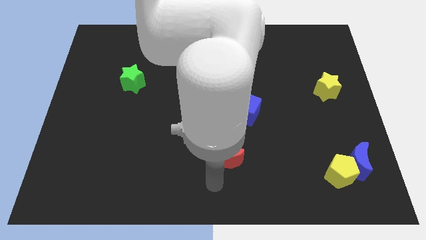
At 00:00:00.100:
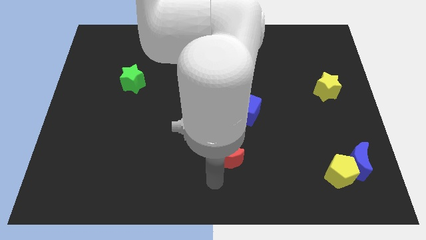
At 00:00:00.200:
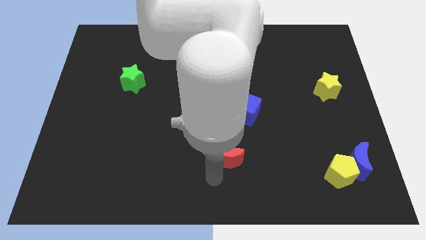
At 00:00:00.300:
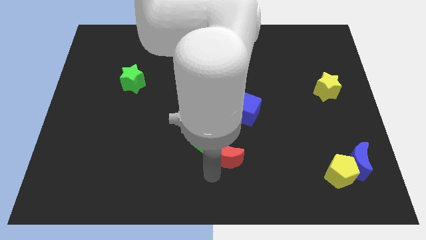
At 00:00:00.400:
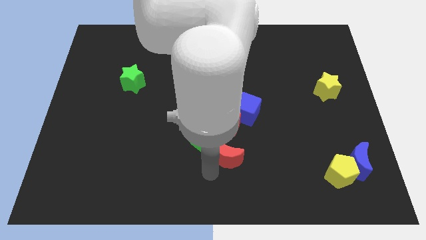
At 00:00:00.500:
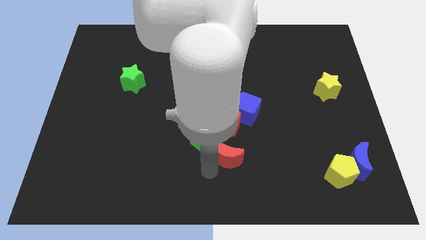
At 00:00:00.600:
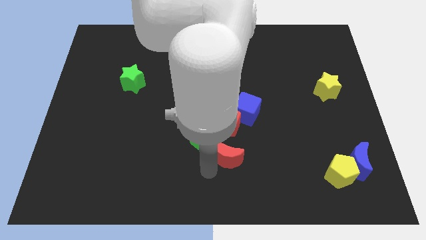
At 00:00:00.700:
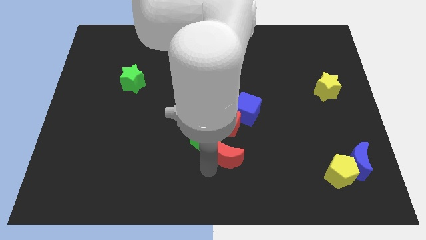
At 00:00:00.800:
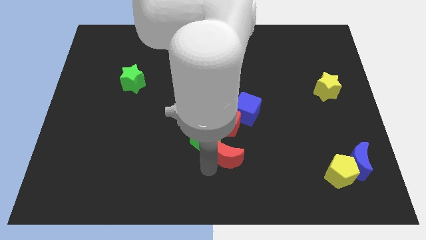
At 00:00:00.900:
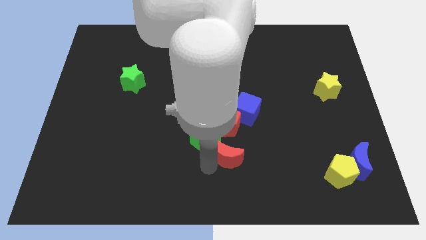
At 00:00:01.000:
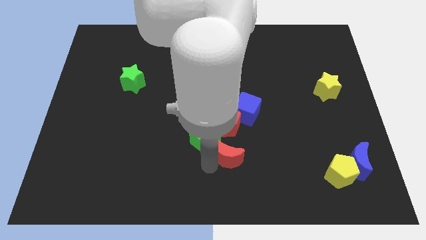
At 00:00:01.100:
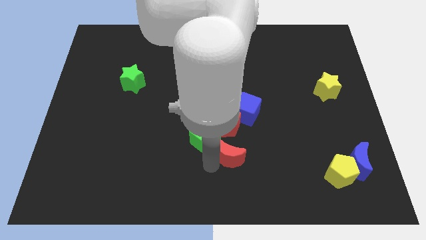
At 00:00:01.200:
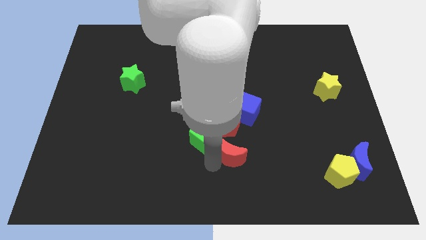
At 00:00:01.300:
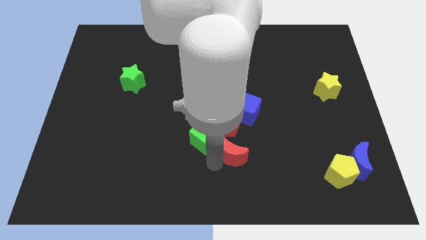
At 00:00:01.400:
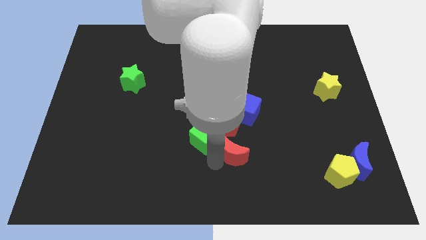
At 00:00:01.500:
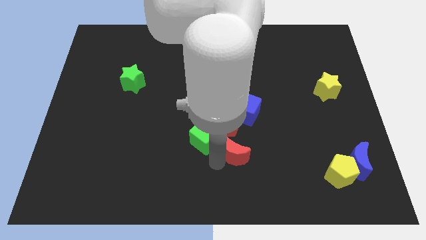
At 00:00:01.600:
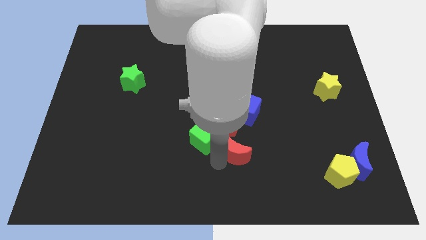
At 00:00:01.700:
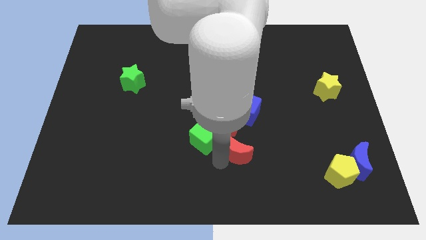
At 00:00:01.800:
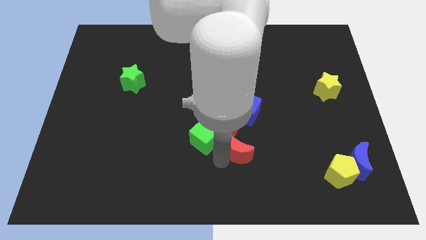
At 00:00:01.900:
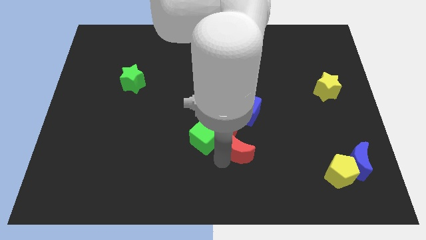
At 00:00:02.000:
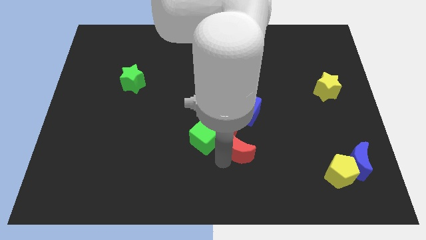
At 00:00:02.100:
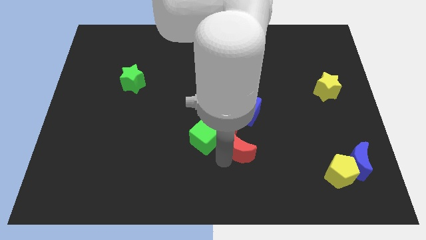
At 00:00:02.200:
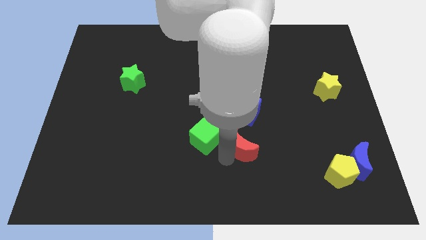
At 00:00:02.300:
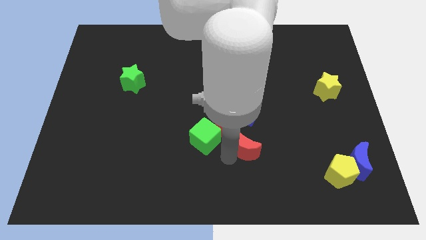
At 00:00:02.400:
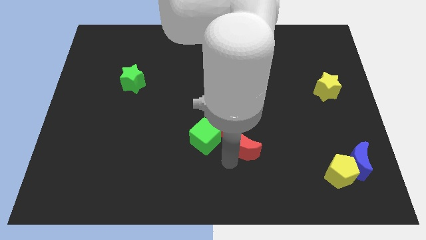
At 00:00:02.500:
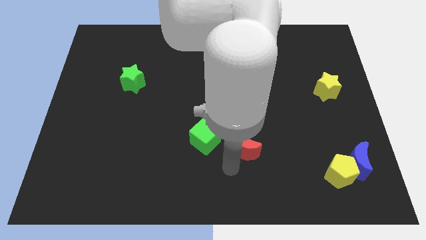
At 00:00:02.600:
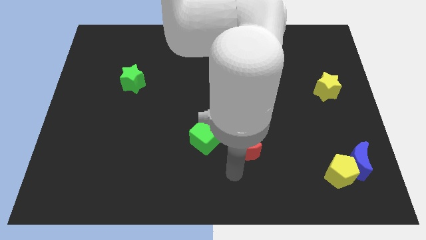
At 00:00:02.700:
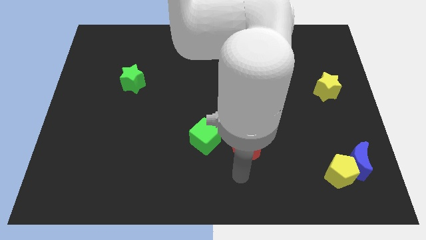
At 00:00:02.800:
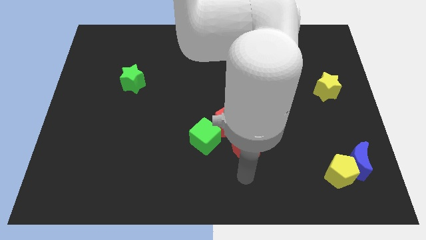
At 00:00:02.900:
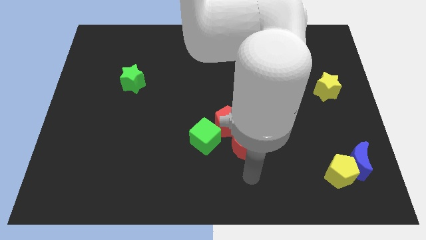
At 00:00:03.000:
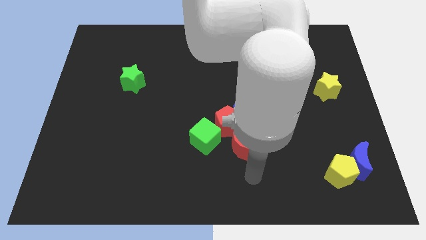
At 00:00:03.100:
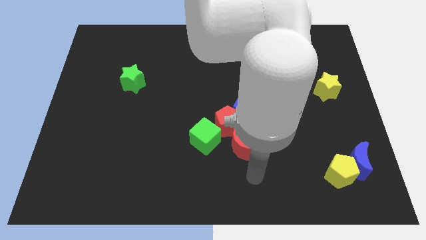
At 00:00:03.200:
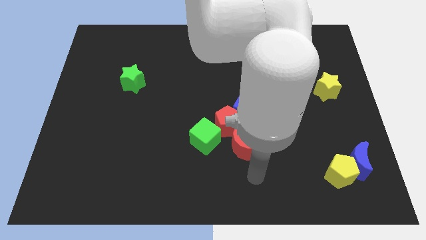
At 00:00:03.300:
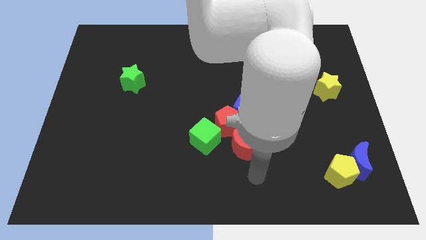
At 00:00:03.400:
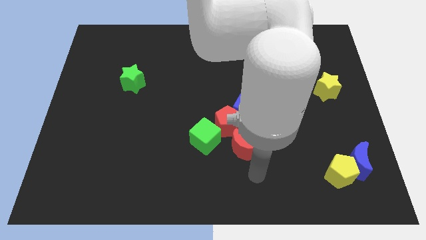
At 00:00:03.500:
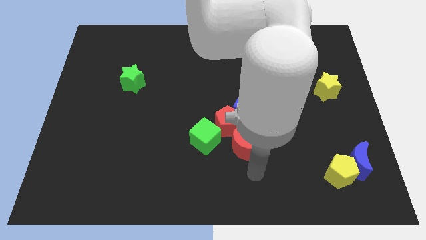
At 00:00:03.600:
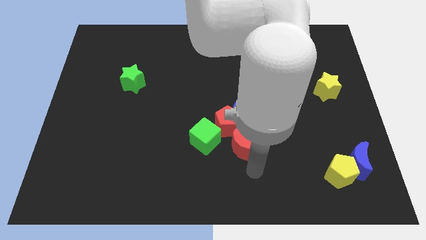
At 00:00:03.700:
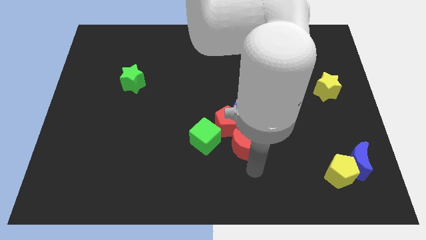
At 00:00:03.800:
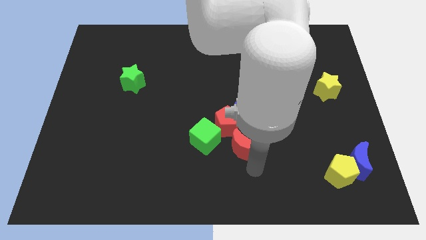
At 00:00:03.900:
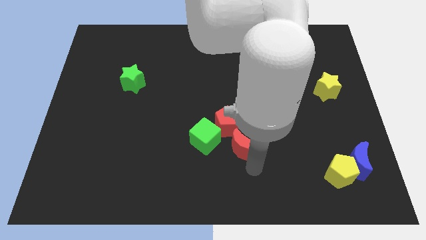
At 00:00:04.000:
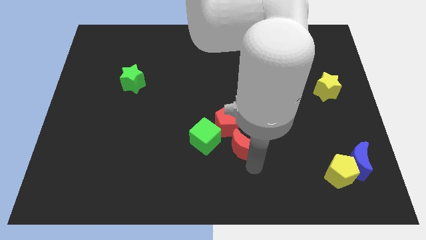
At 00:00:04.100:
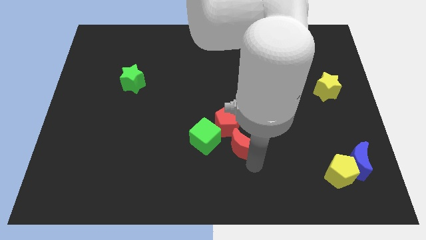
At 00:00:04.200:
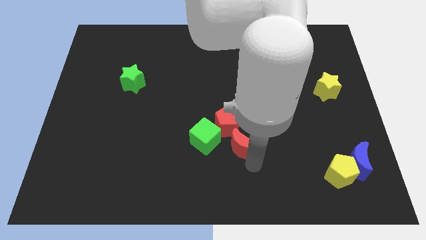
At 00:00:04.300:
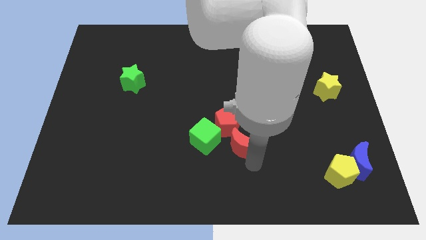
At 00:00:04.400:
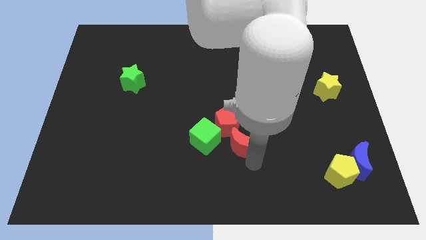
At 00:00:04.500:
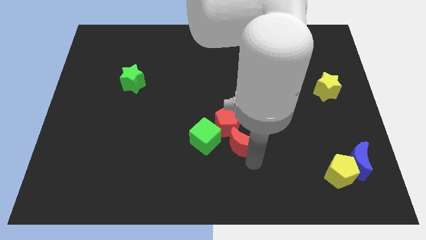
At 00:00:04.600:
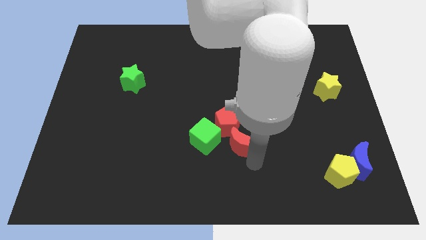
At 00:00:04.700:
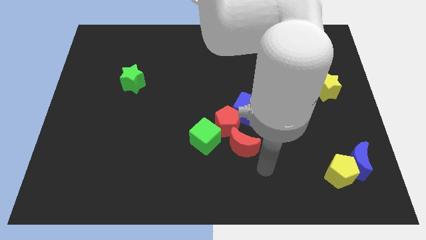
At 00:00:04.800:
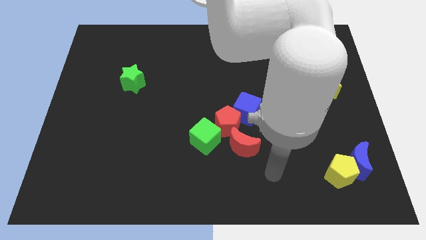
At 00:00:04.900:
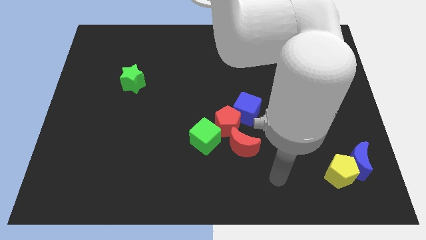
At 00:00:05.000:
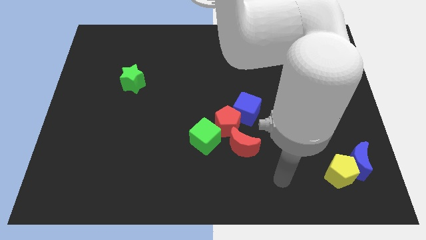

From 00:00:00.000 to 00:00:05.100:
push the red crescent to the right of the green cube

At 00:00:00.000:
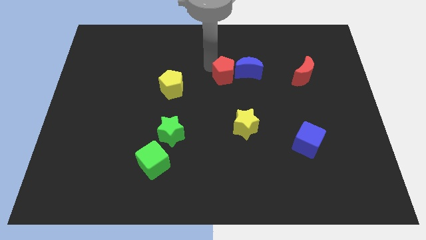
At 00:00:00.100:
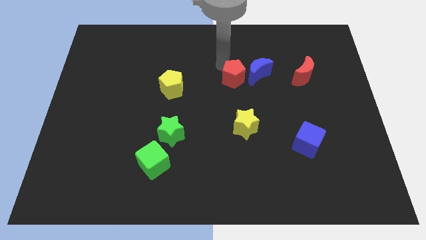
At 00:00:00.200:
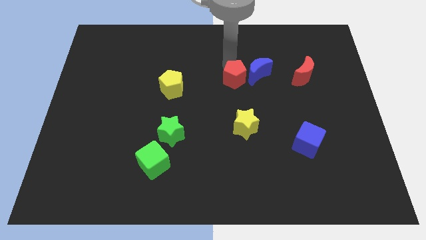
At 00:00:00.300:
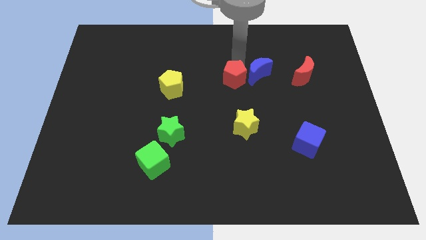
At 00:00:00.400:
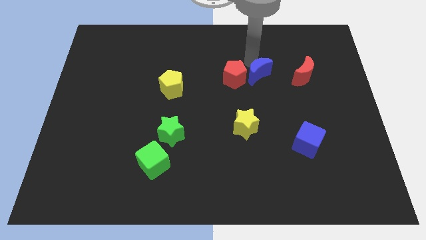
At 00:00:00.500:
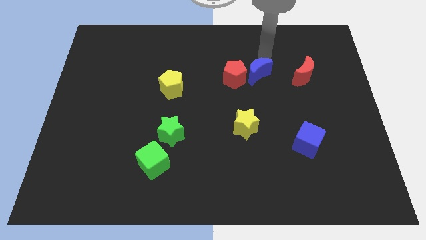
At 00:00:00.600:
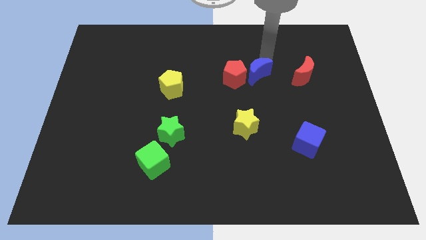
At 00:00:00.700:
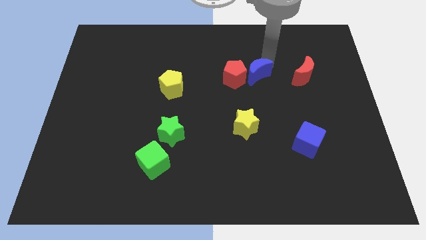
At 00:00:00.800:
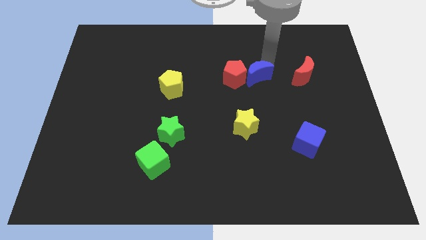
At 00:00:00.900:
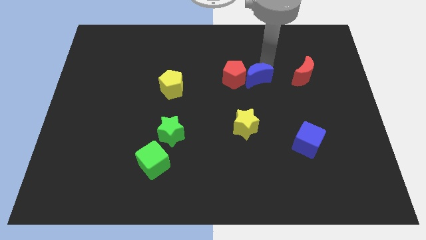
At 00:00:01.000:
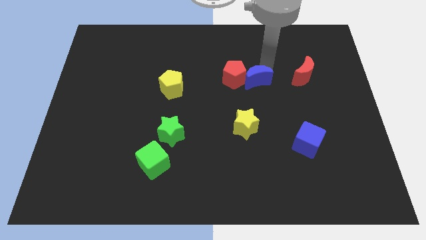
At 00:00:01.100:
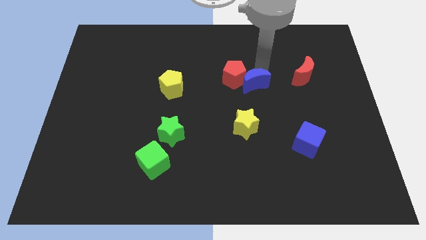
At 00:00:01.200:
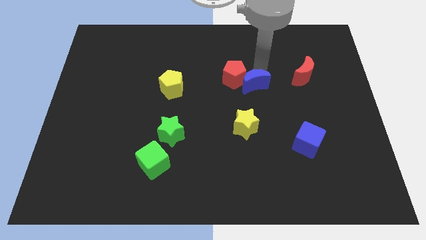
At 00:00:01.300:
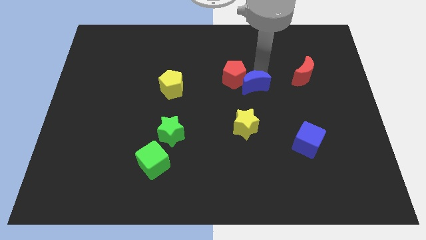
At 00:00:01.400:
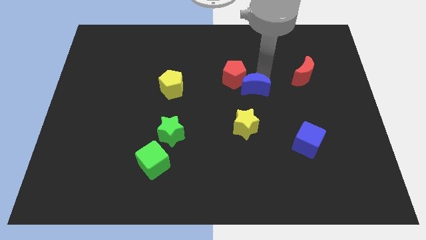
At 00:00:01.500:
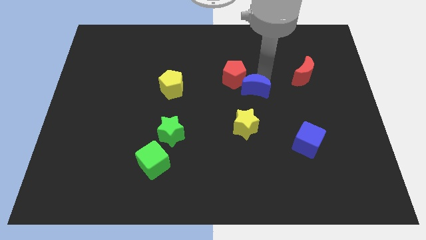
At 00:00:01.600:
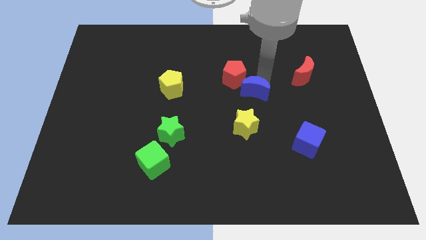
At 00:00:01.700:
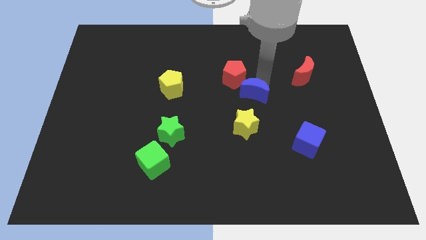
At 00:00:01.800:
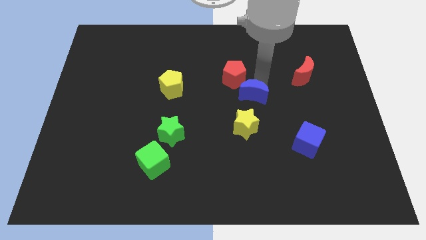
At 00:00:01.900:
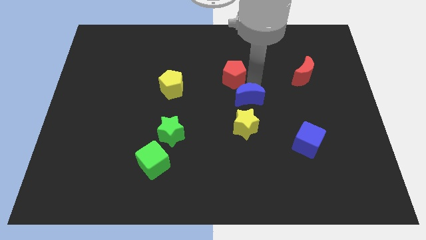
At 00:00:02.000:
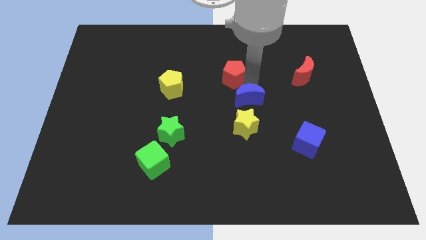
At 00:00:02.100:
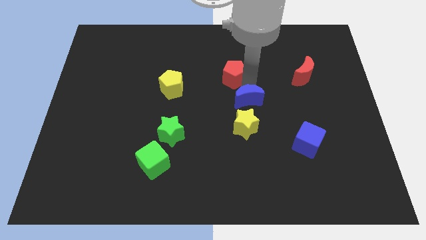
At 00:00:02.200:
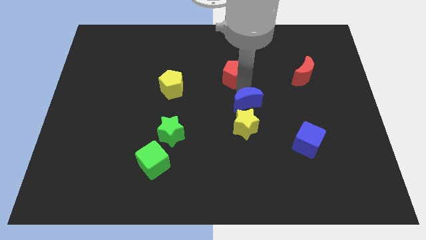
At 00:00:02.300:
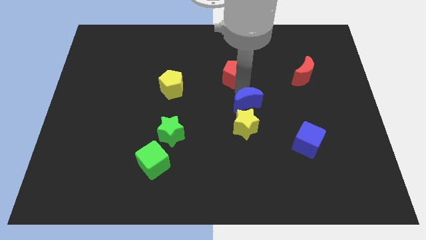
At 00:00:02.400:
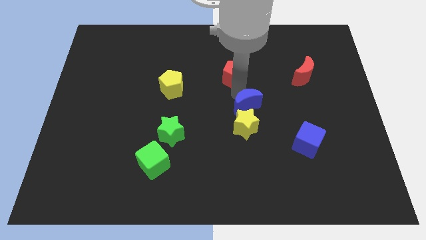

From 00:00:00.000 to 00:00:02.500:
push blue crescent above yellow star

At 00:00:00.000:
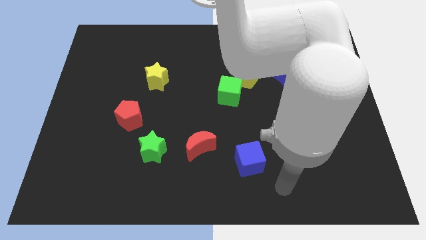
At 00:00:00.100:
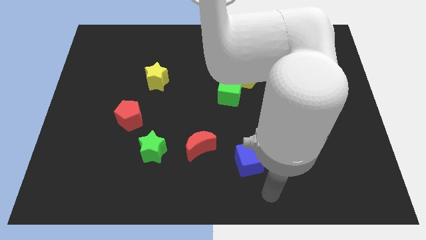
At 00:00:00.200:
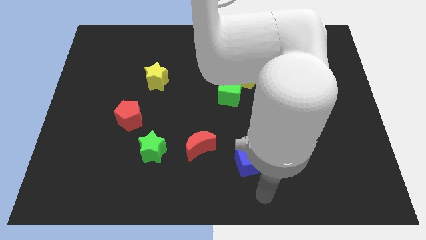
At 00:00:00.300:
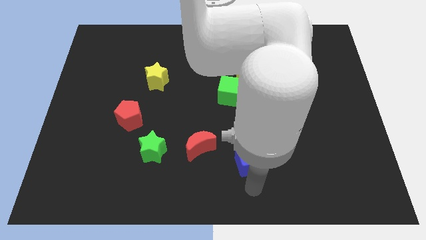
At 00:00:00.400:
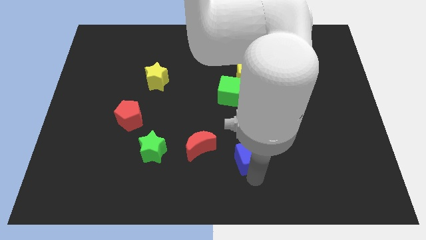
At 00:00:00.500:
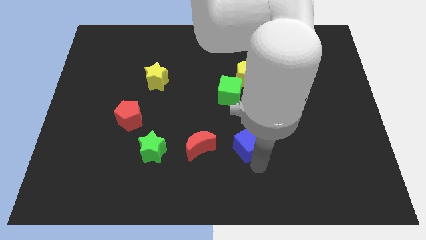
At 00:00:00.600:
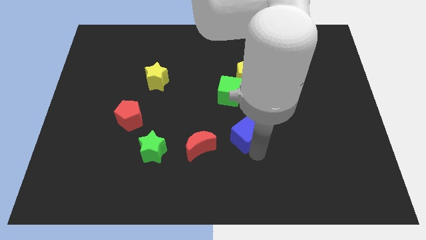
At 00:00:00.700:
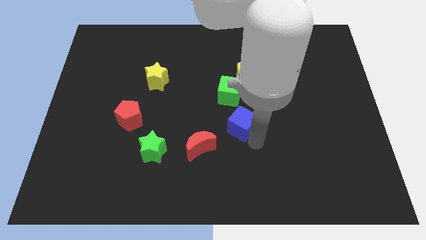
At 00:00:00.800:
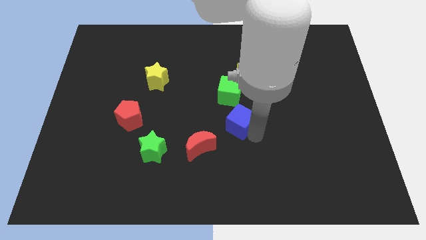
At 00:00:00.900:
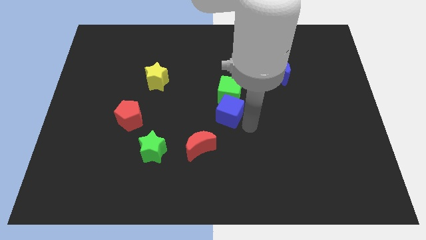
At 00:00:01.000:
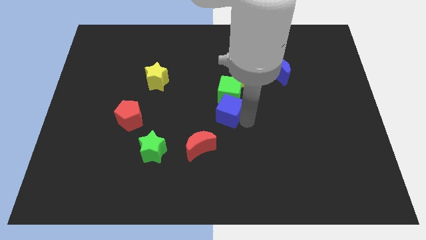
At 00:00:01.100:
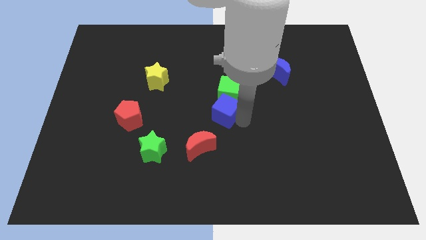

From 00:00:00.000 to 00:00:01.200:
place the blue cube vertically below the green cube

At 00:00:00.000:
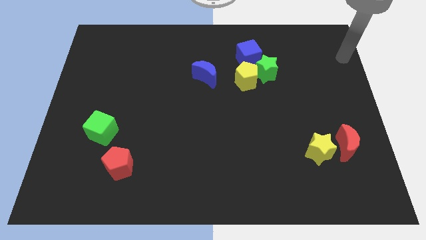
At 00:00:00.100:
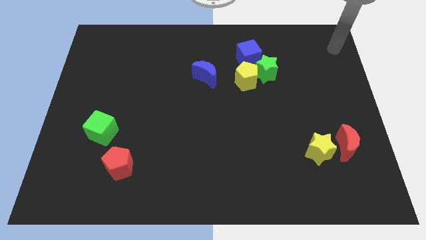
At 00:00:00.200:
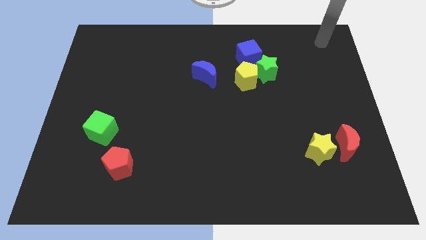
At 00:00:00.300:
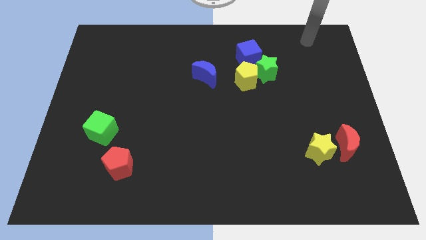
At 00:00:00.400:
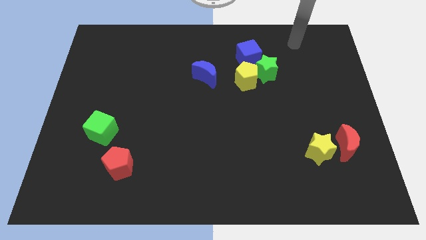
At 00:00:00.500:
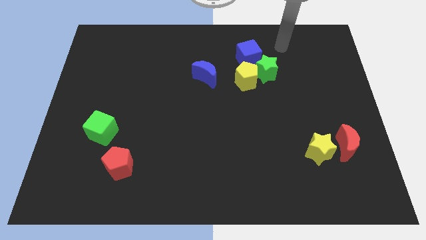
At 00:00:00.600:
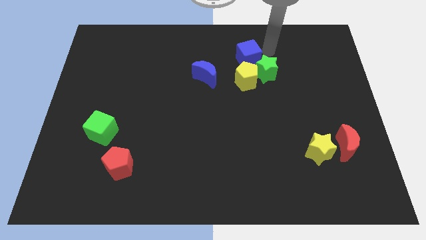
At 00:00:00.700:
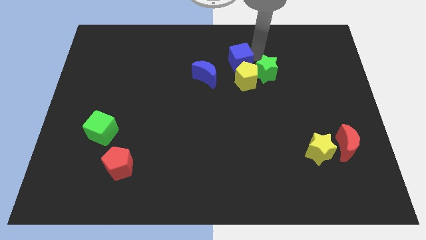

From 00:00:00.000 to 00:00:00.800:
place the arm to the right of blue cube
